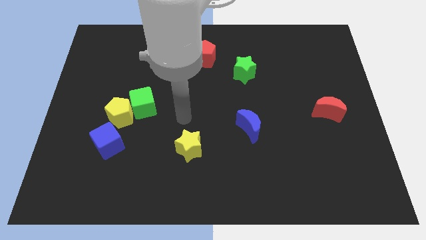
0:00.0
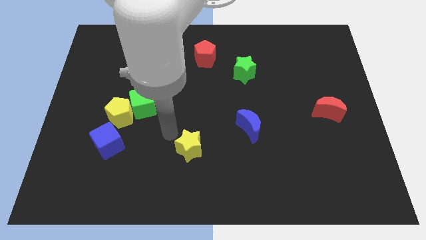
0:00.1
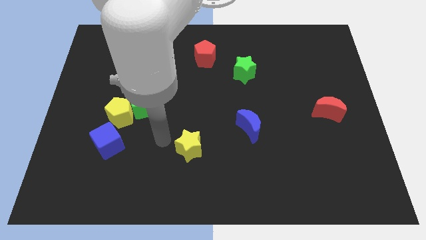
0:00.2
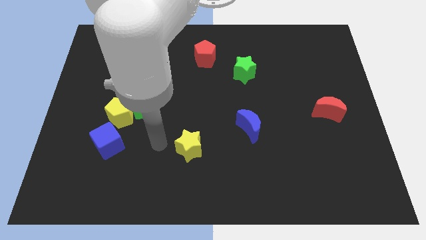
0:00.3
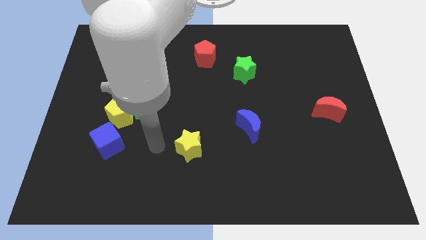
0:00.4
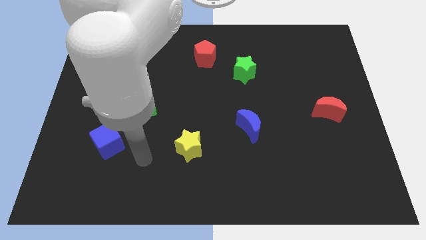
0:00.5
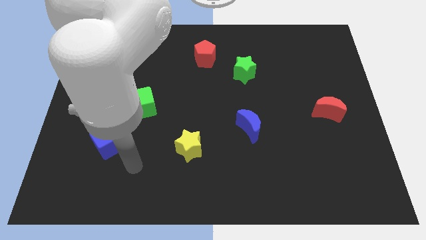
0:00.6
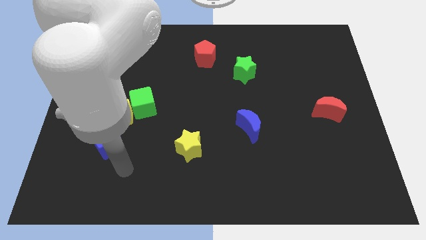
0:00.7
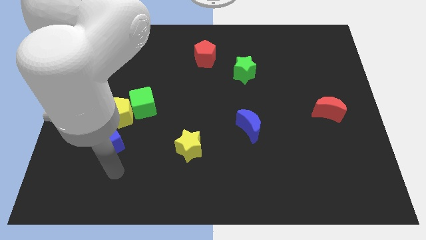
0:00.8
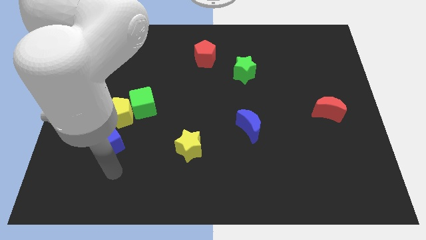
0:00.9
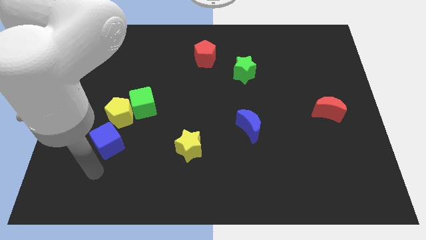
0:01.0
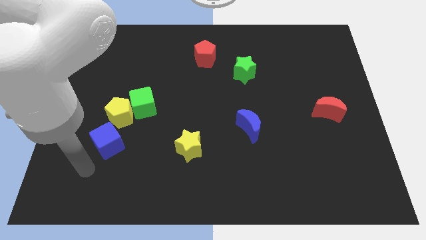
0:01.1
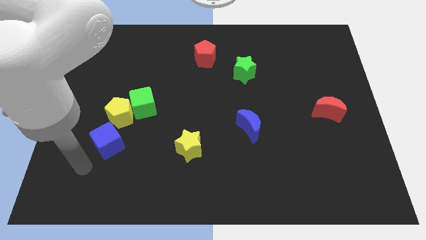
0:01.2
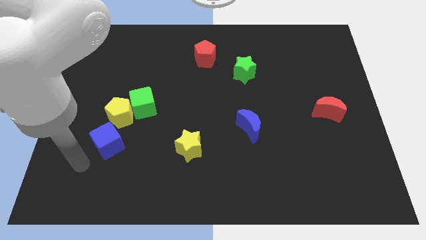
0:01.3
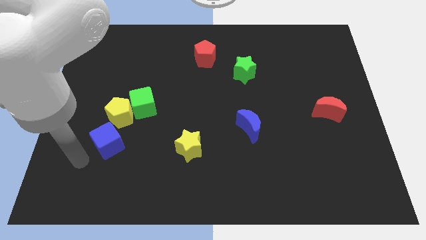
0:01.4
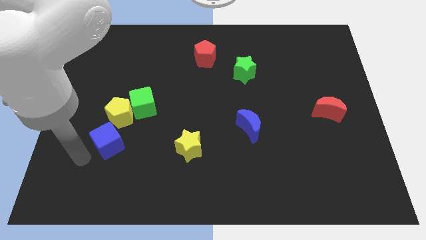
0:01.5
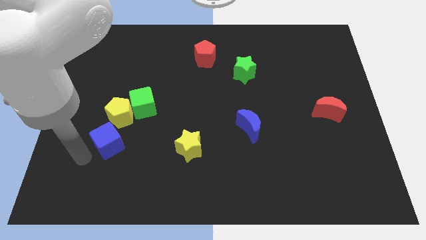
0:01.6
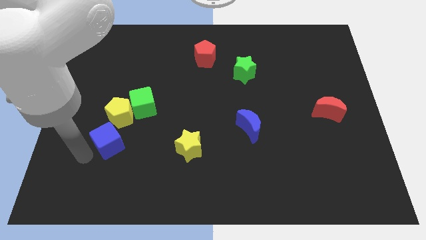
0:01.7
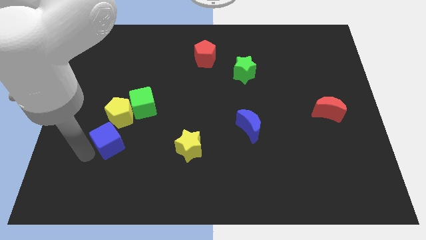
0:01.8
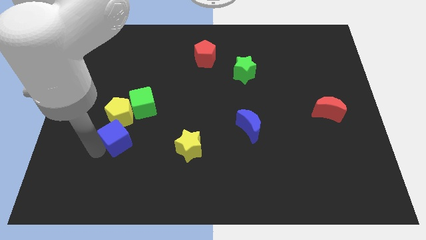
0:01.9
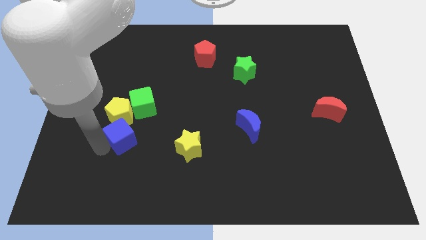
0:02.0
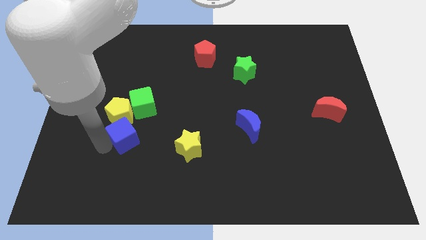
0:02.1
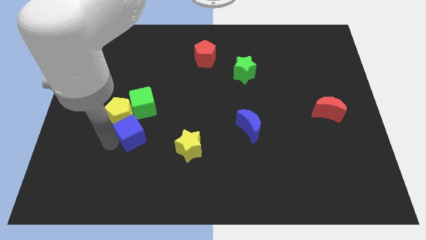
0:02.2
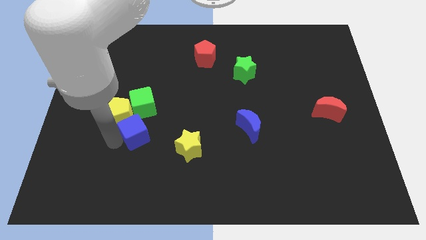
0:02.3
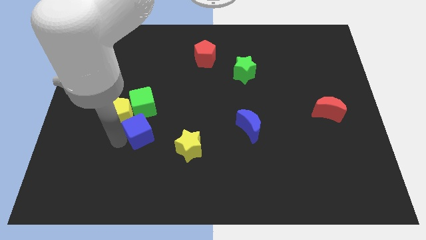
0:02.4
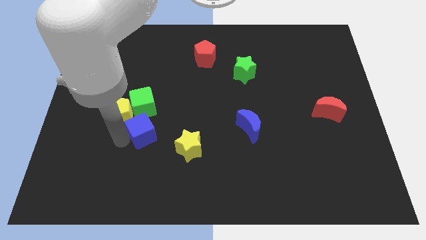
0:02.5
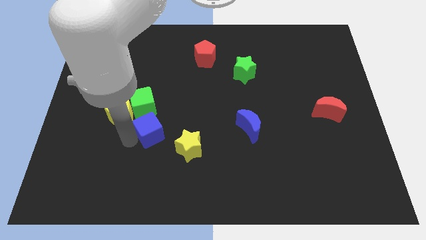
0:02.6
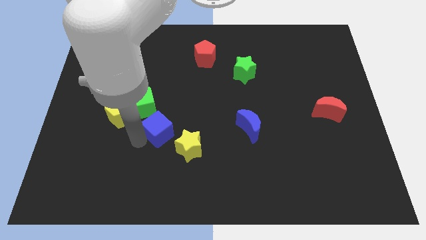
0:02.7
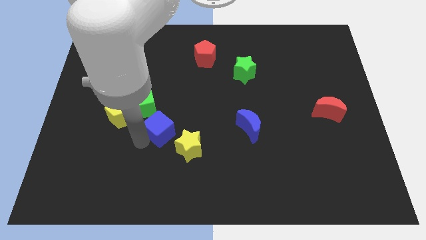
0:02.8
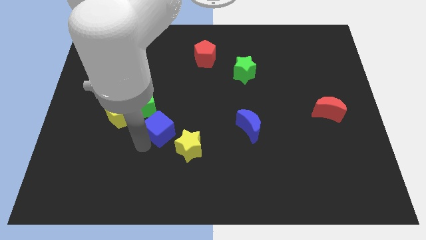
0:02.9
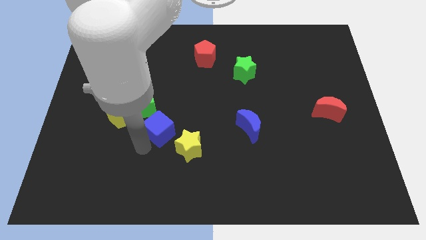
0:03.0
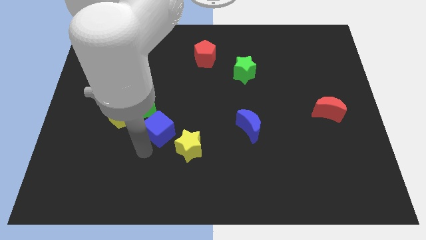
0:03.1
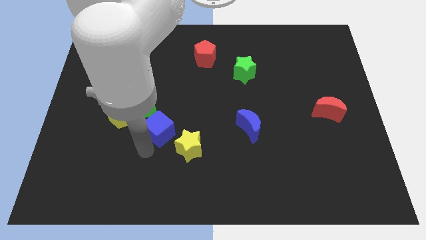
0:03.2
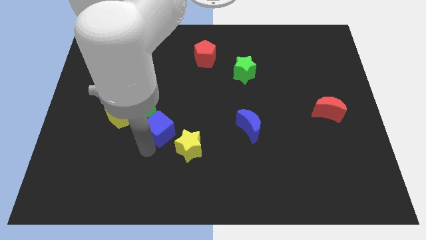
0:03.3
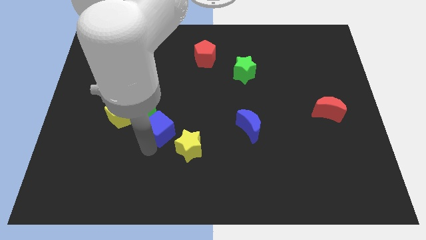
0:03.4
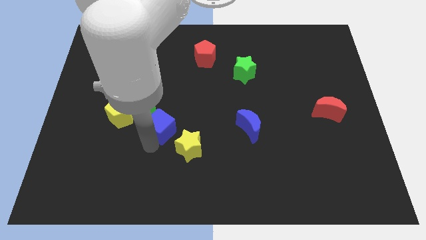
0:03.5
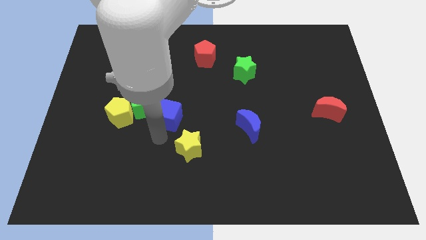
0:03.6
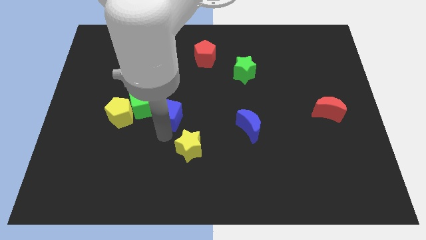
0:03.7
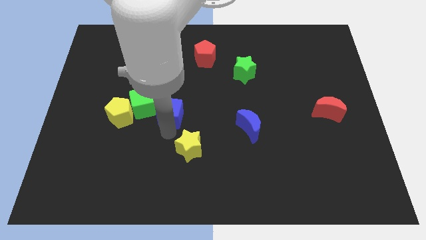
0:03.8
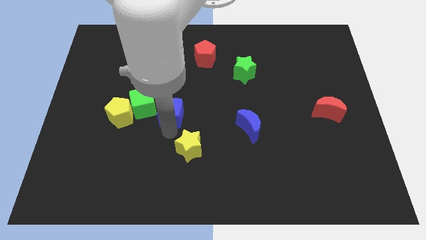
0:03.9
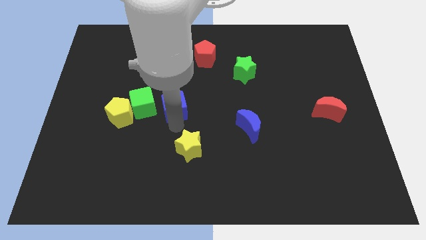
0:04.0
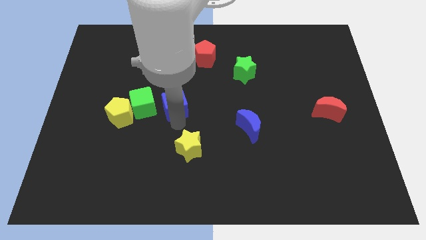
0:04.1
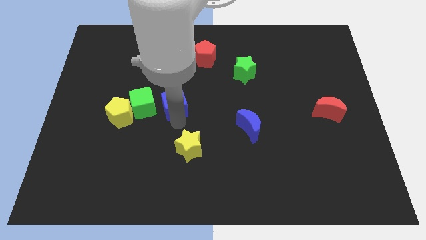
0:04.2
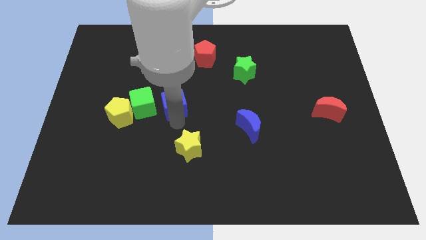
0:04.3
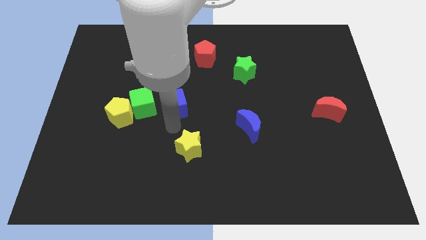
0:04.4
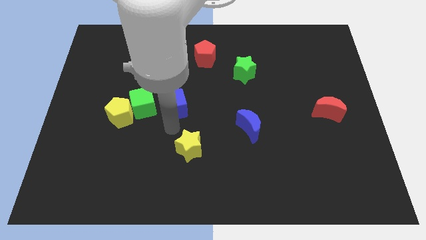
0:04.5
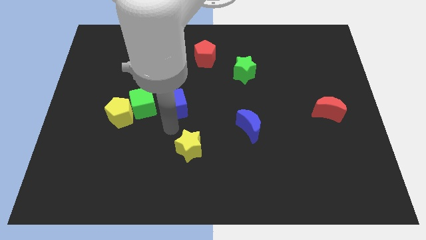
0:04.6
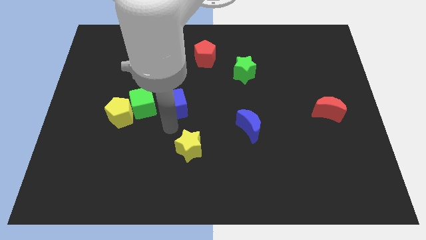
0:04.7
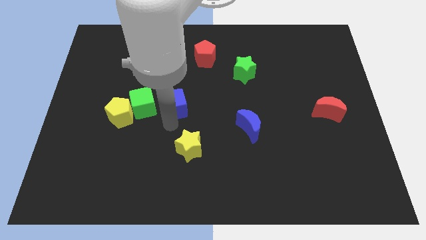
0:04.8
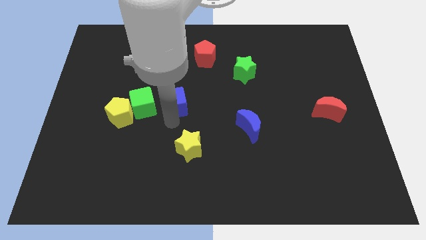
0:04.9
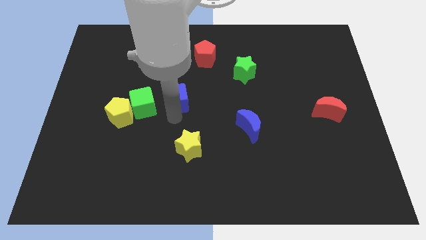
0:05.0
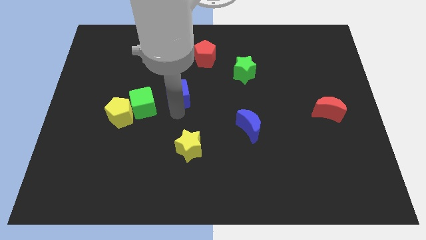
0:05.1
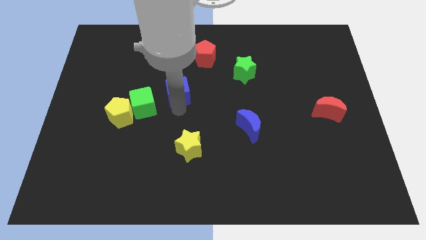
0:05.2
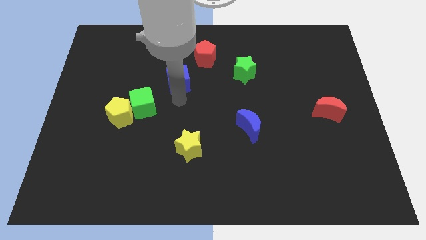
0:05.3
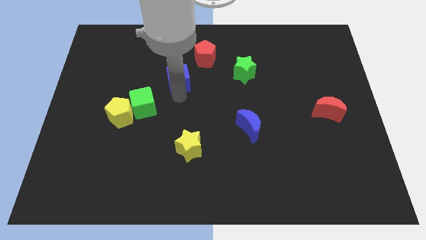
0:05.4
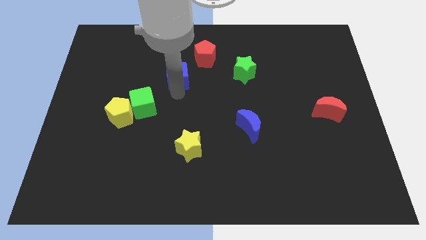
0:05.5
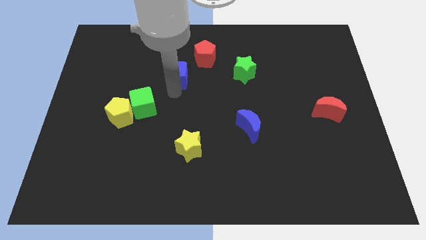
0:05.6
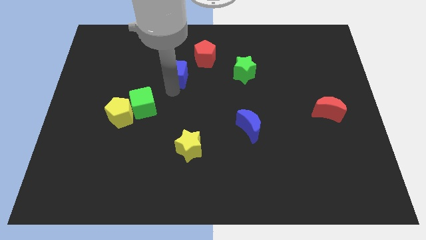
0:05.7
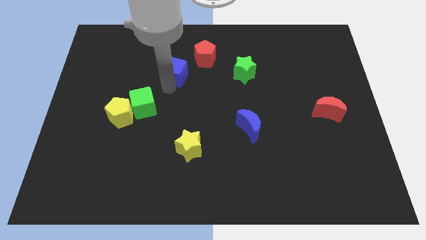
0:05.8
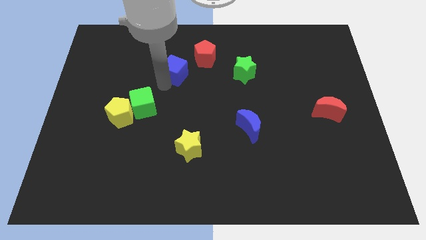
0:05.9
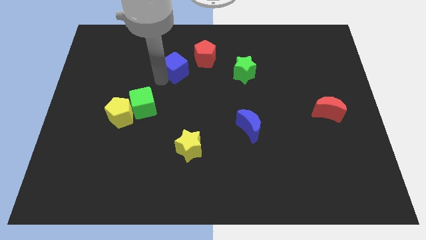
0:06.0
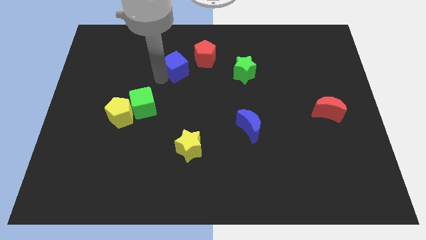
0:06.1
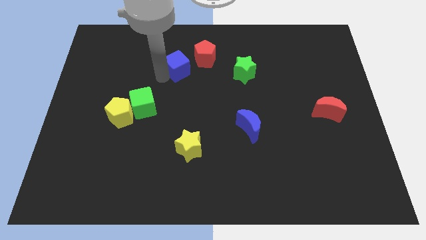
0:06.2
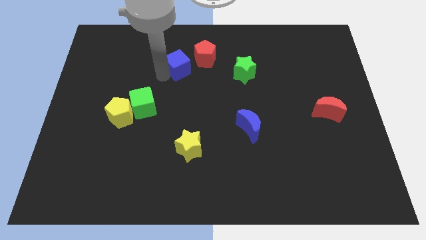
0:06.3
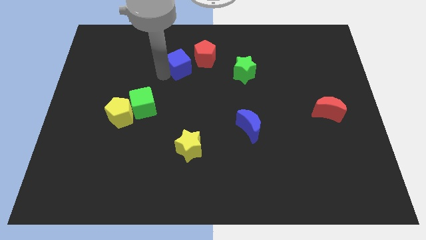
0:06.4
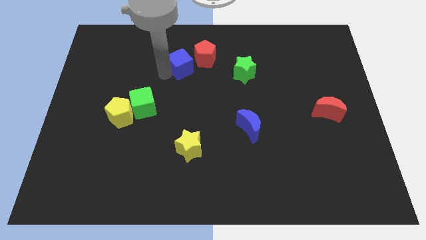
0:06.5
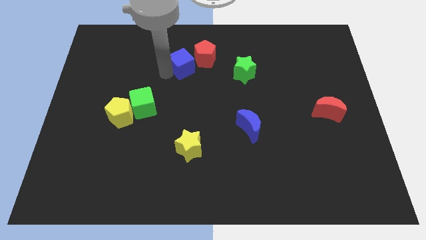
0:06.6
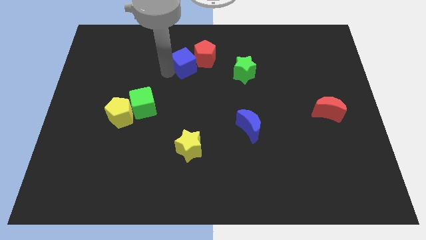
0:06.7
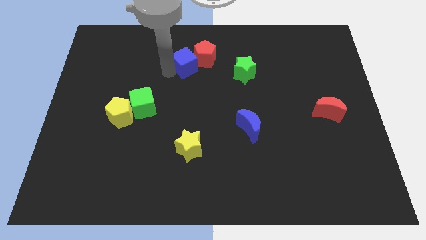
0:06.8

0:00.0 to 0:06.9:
slide the blue cube to the red pentagon

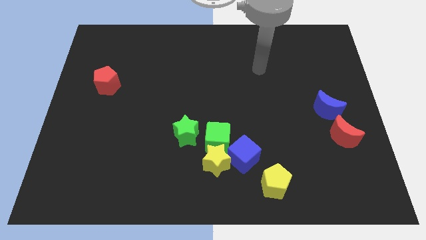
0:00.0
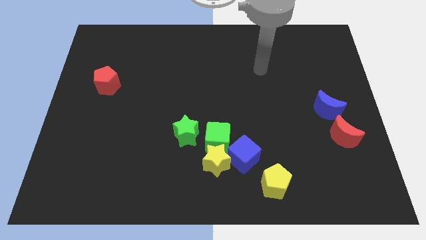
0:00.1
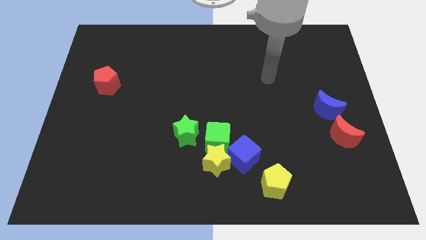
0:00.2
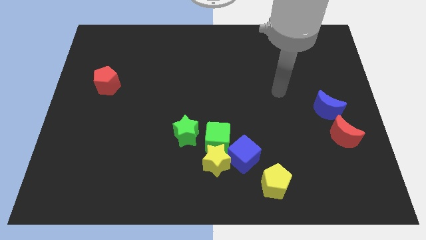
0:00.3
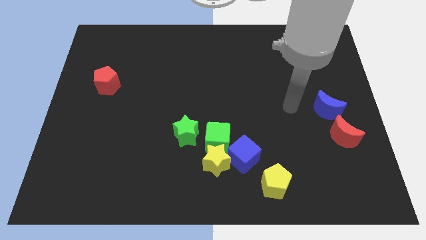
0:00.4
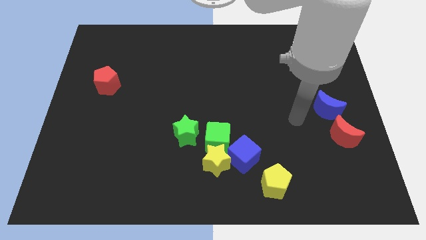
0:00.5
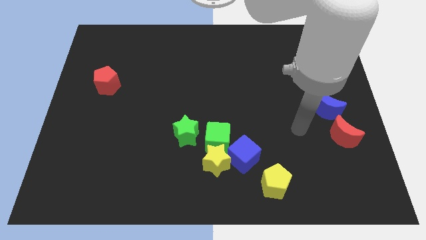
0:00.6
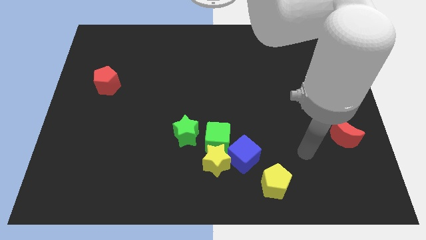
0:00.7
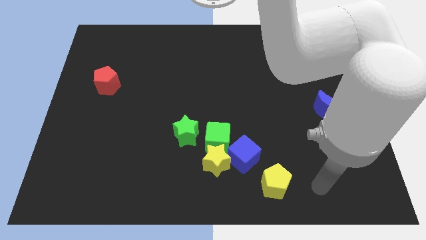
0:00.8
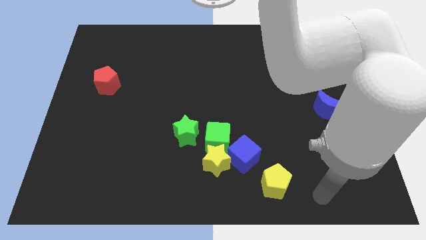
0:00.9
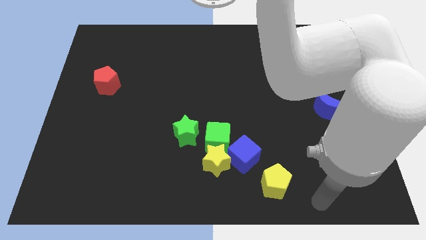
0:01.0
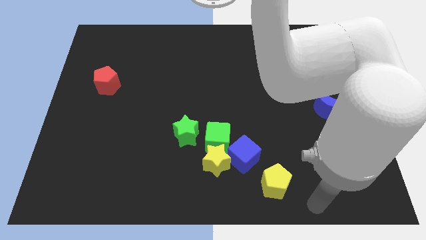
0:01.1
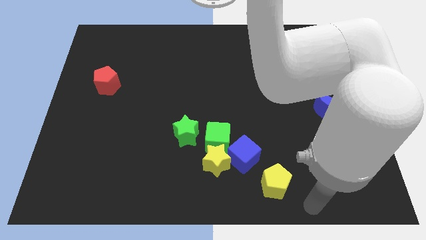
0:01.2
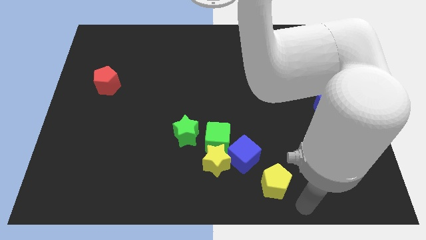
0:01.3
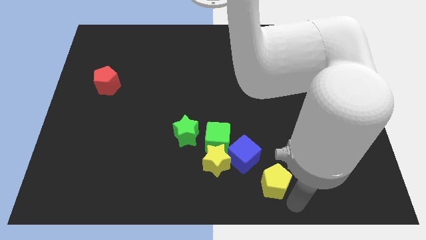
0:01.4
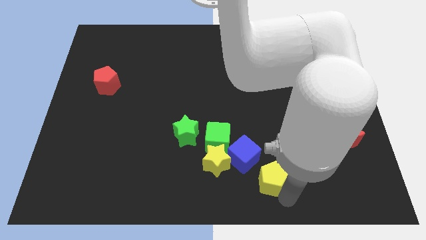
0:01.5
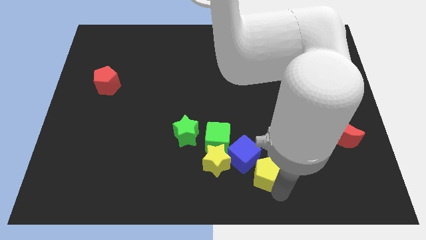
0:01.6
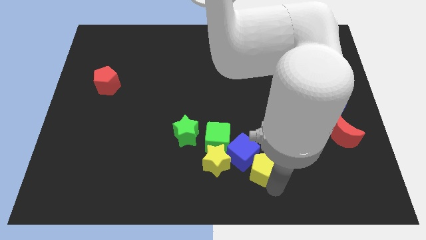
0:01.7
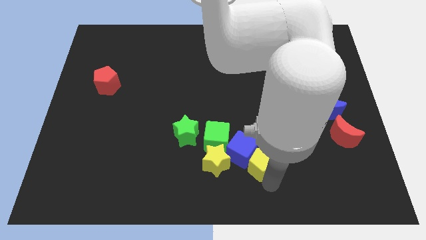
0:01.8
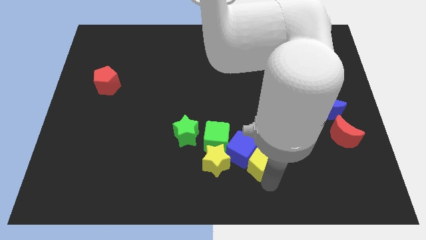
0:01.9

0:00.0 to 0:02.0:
put the yellow pentagon next to the blue cube
